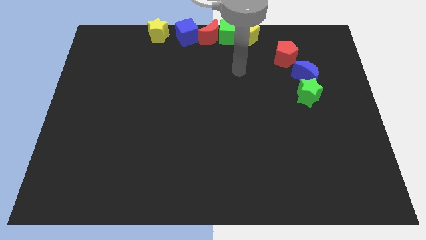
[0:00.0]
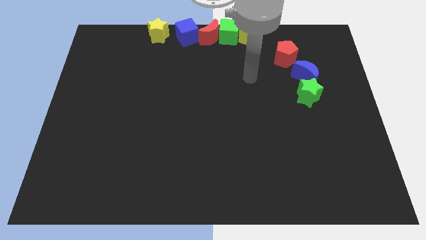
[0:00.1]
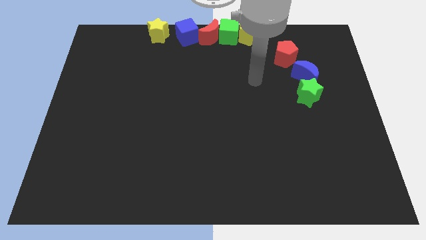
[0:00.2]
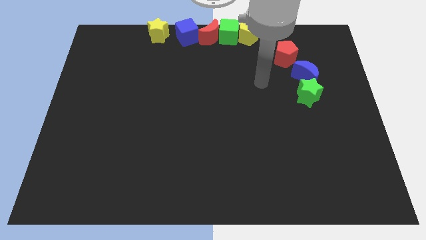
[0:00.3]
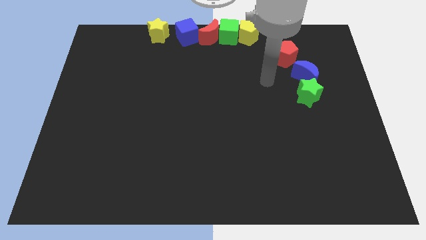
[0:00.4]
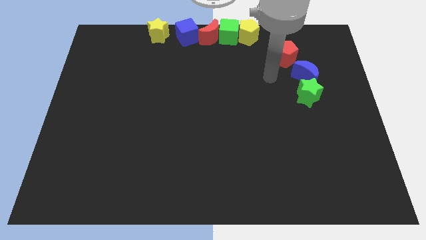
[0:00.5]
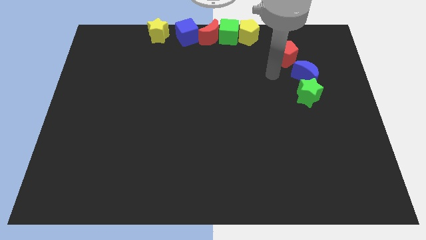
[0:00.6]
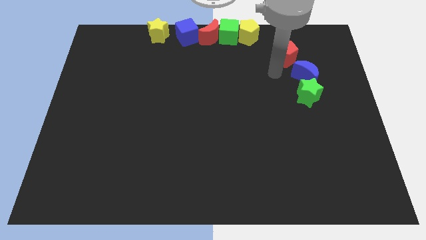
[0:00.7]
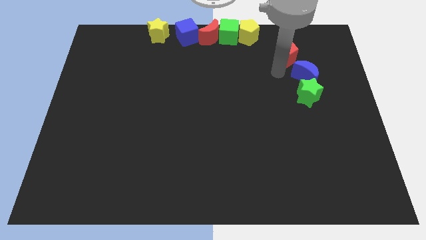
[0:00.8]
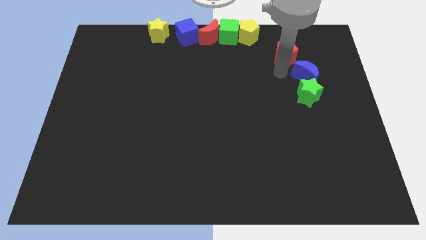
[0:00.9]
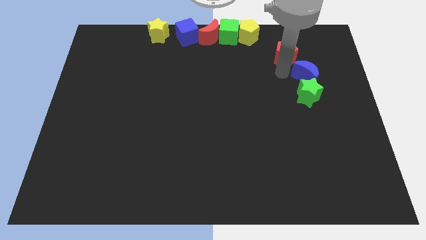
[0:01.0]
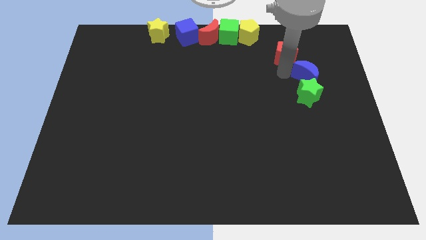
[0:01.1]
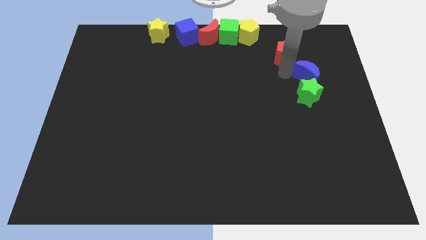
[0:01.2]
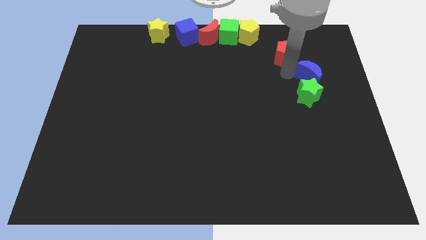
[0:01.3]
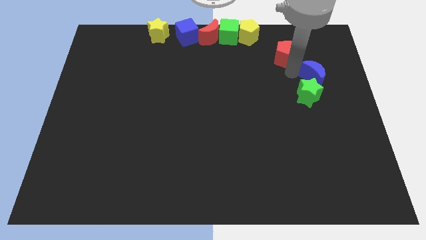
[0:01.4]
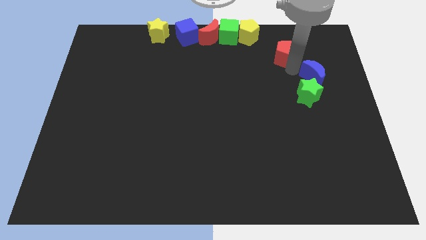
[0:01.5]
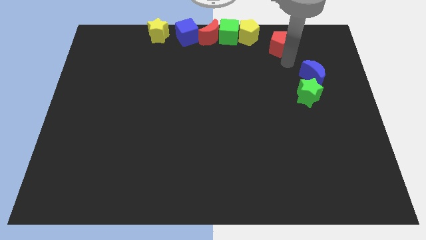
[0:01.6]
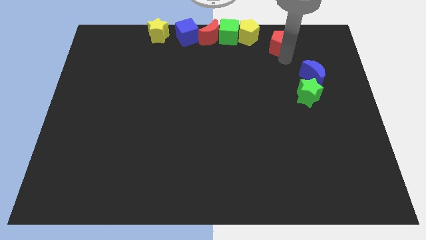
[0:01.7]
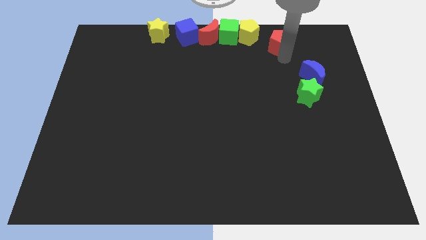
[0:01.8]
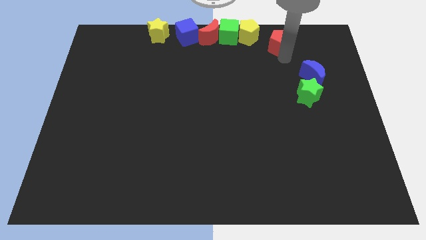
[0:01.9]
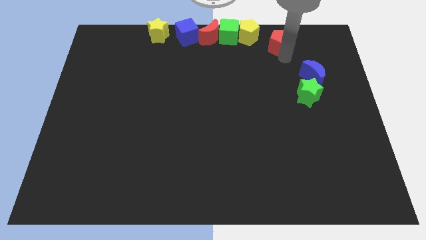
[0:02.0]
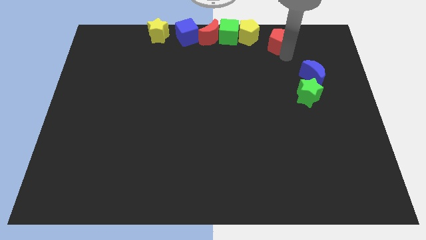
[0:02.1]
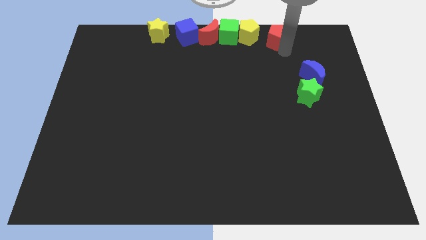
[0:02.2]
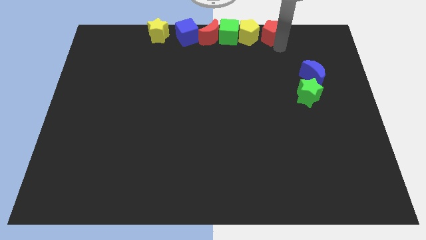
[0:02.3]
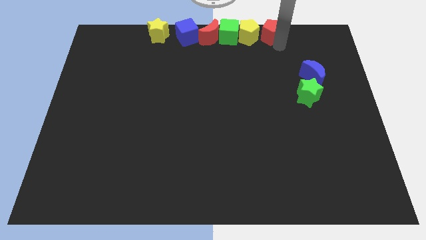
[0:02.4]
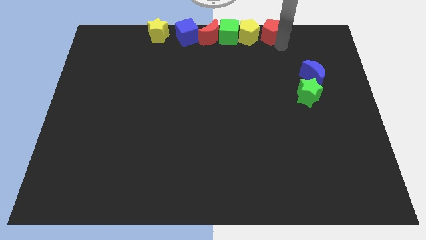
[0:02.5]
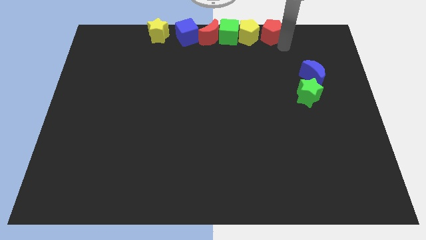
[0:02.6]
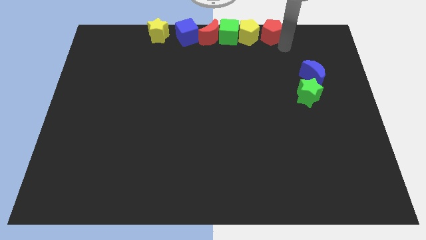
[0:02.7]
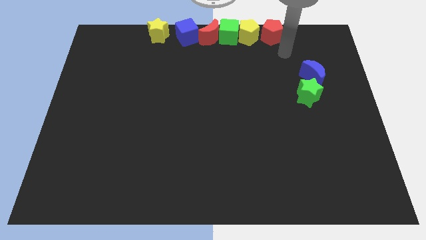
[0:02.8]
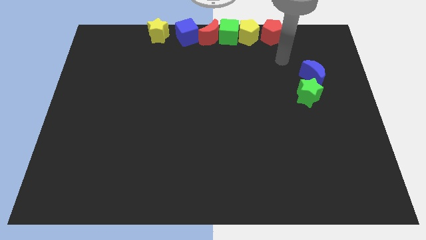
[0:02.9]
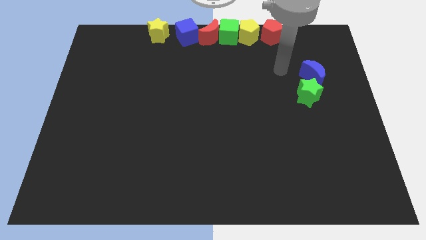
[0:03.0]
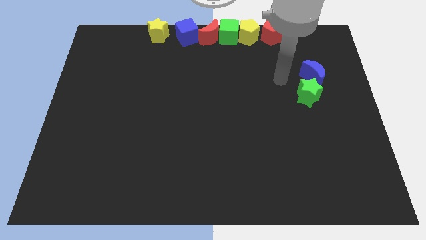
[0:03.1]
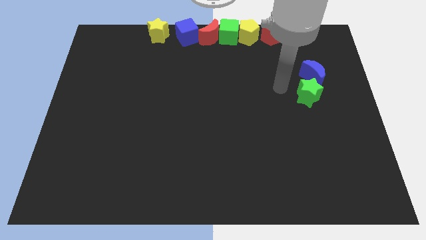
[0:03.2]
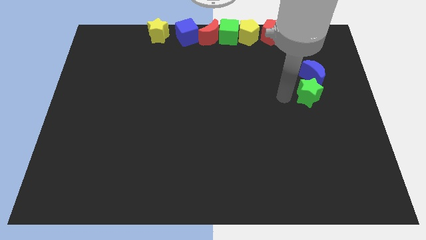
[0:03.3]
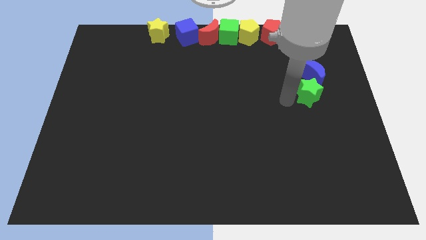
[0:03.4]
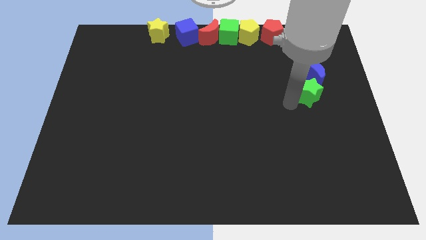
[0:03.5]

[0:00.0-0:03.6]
move the red pentagon to the right side of the yellow pentagon

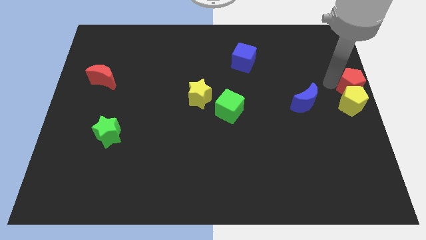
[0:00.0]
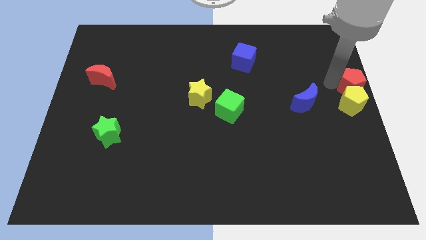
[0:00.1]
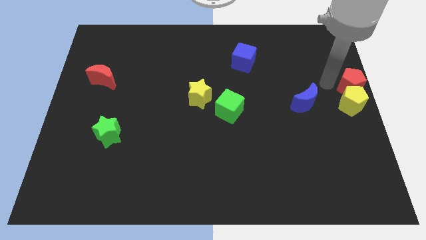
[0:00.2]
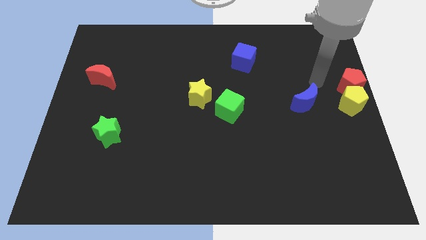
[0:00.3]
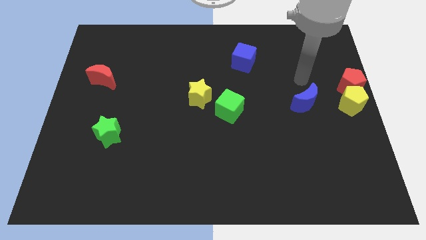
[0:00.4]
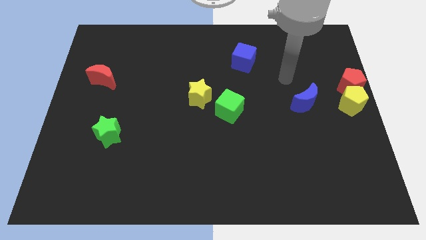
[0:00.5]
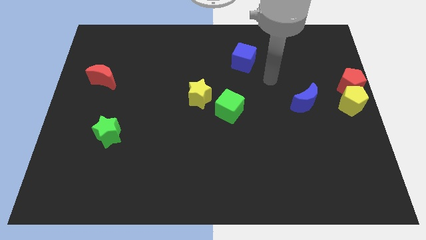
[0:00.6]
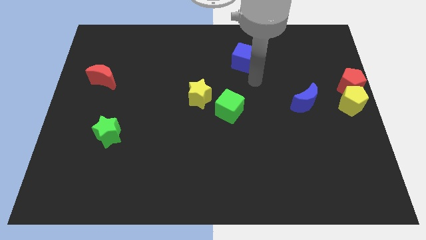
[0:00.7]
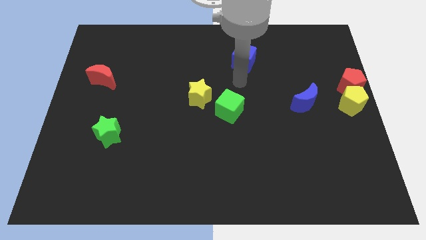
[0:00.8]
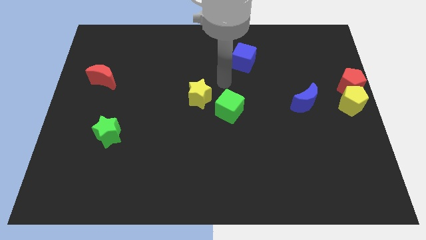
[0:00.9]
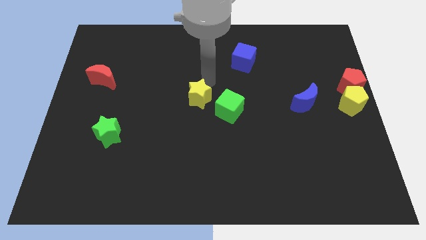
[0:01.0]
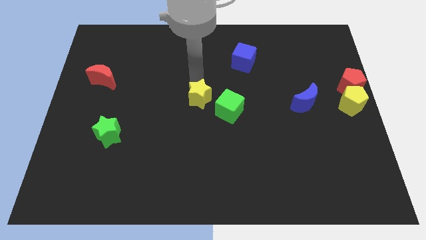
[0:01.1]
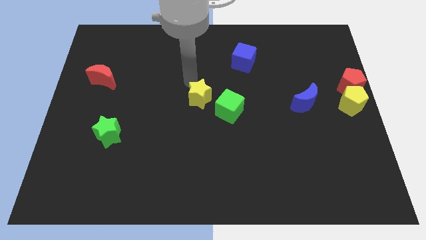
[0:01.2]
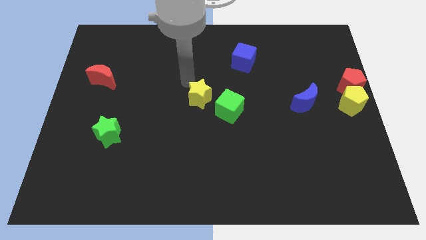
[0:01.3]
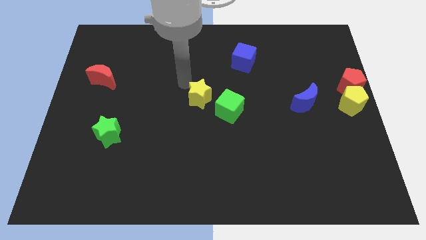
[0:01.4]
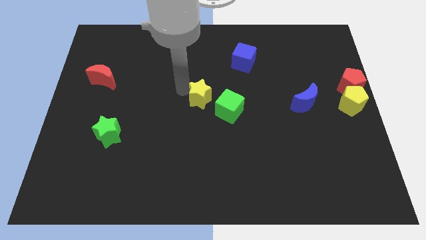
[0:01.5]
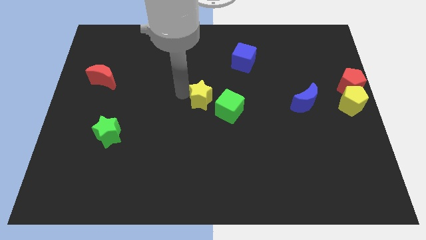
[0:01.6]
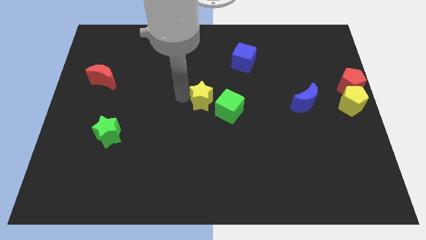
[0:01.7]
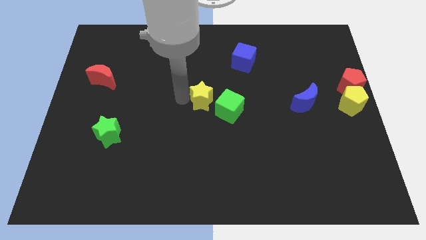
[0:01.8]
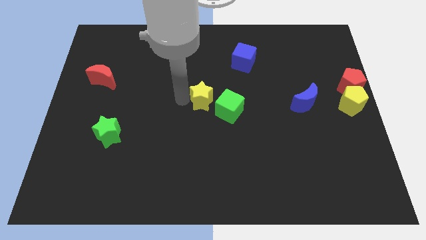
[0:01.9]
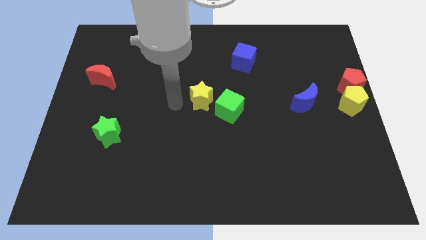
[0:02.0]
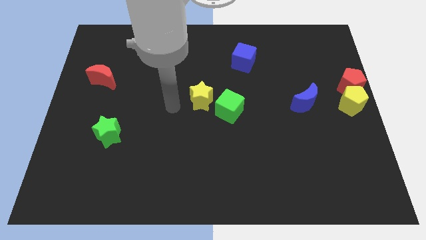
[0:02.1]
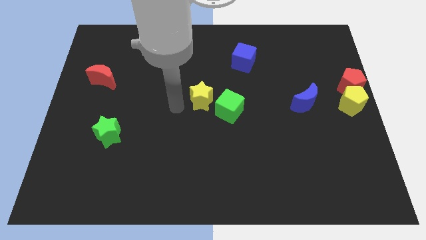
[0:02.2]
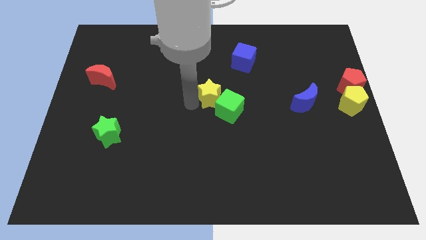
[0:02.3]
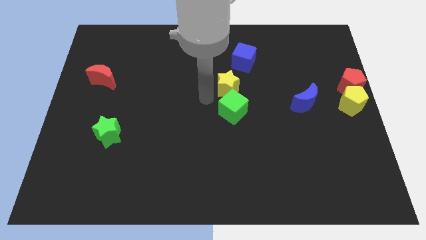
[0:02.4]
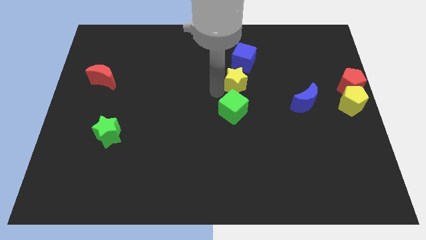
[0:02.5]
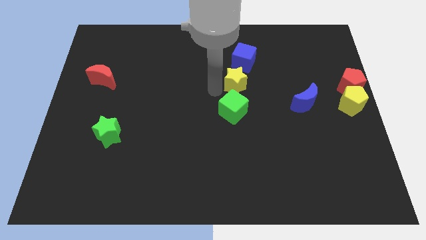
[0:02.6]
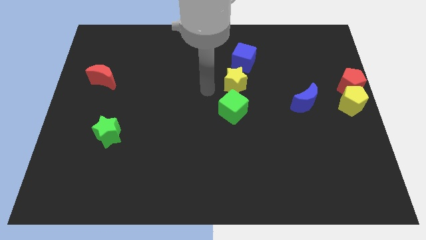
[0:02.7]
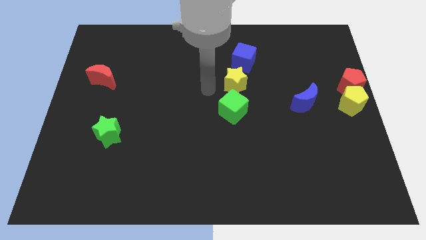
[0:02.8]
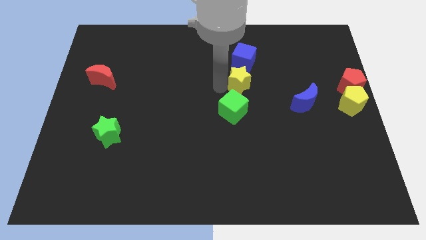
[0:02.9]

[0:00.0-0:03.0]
push yellow star in between blue cube and green cube

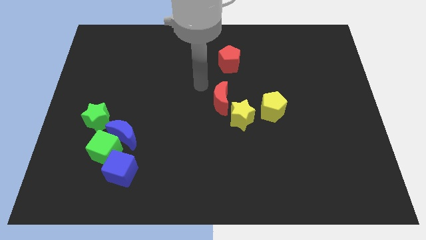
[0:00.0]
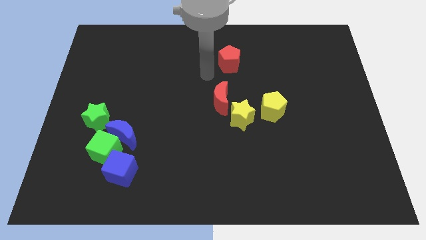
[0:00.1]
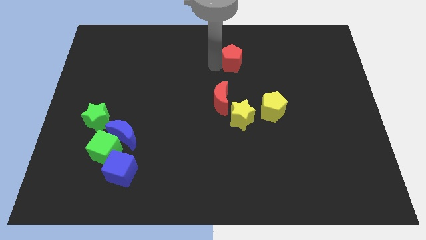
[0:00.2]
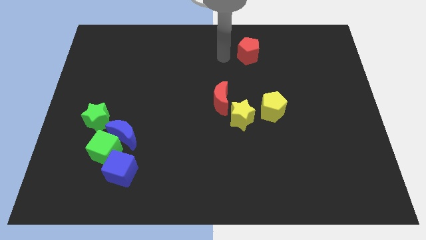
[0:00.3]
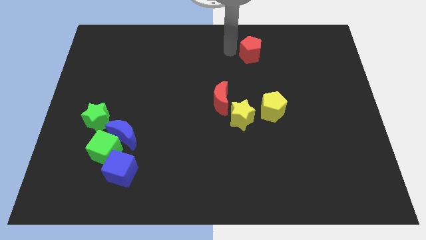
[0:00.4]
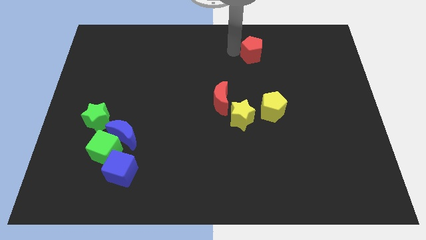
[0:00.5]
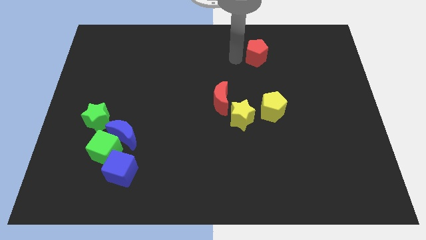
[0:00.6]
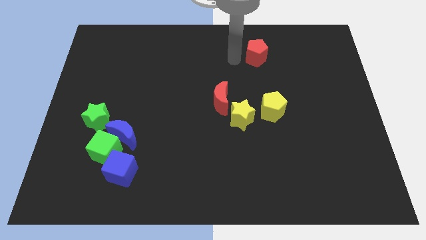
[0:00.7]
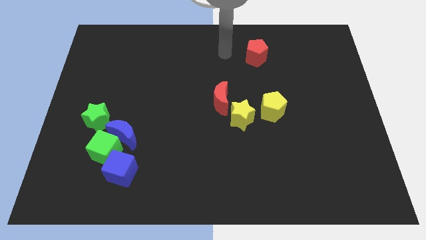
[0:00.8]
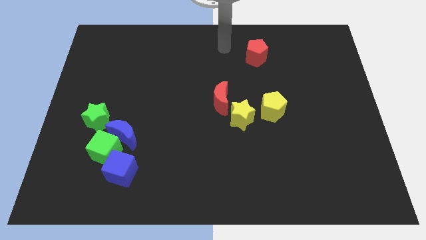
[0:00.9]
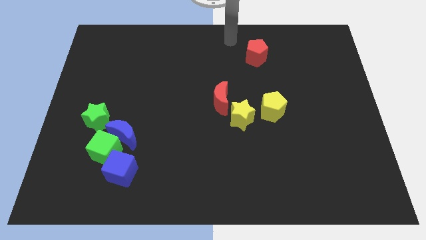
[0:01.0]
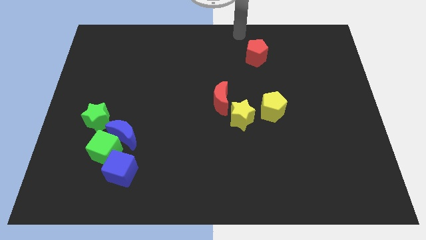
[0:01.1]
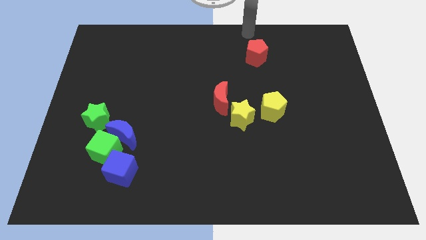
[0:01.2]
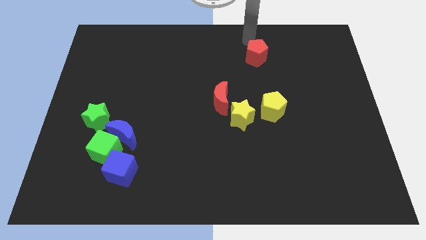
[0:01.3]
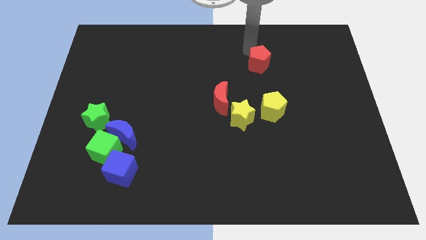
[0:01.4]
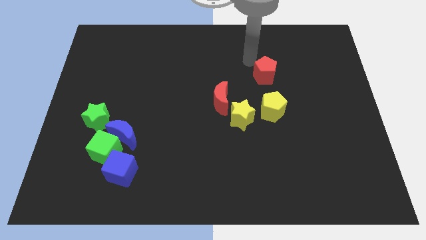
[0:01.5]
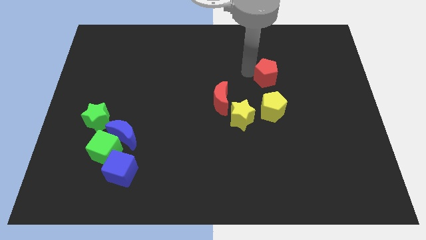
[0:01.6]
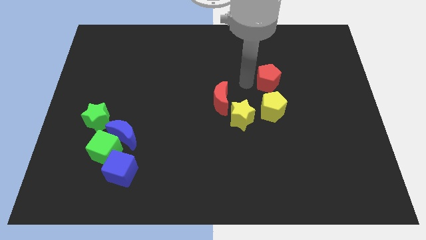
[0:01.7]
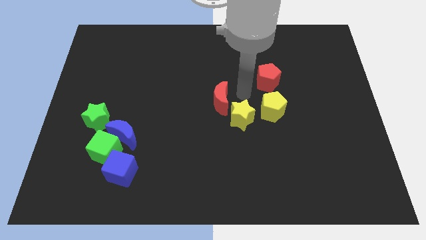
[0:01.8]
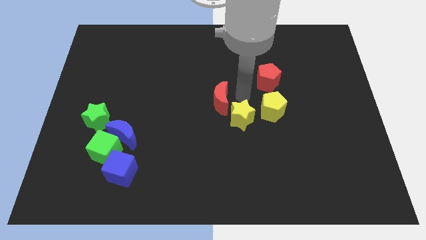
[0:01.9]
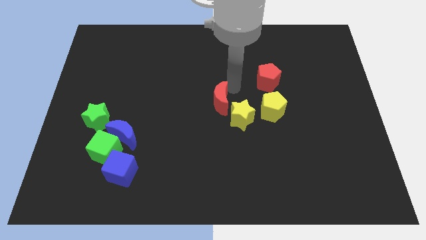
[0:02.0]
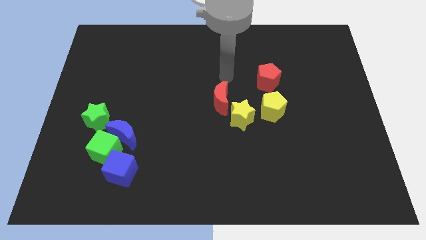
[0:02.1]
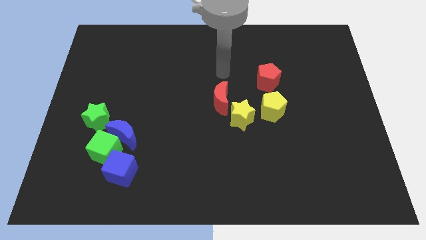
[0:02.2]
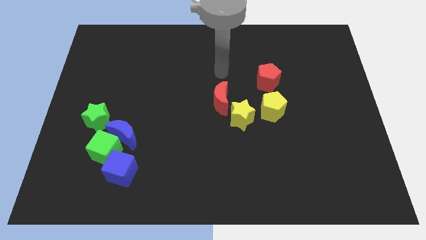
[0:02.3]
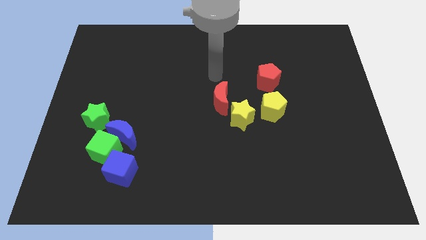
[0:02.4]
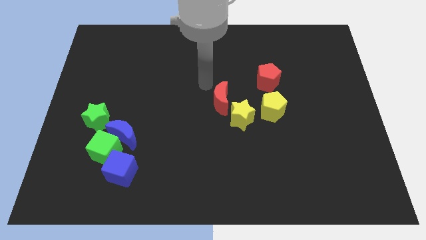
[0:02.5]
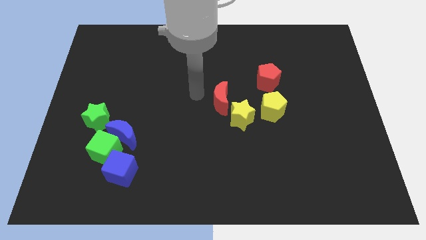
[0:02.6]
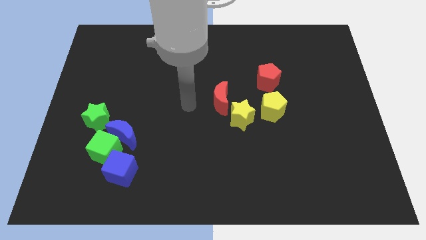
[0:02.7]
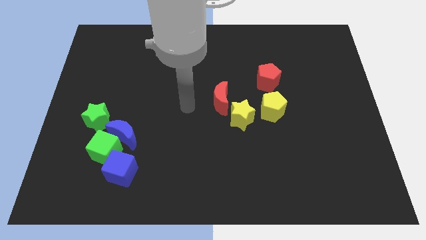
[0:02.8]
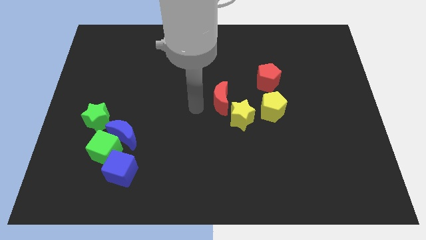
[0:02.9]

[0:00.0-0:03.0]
put the red pentagon above the yellow pentagon
